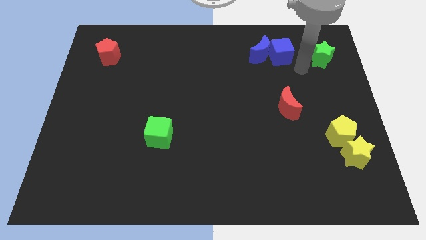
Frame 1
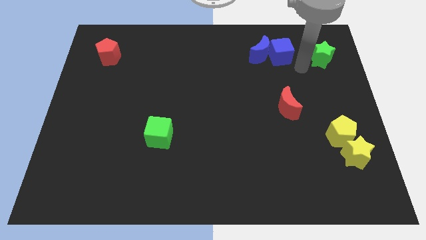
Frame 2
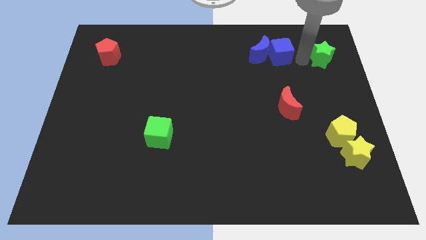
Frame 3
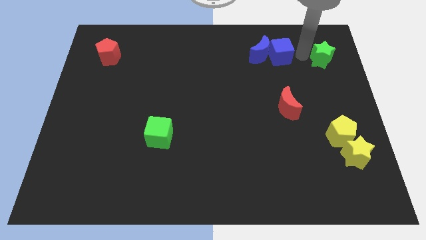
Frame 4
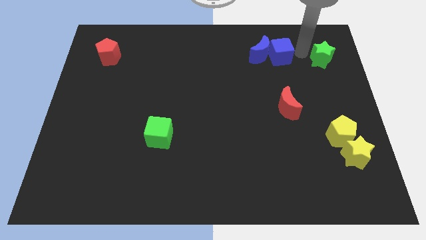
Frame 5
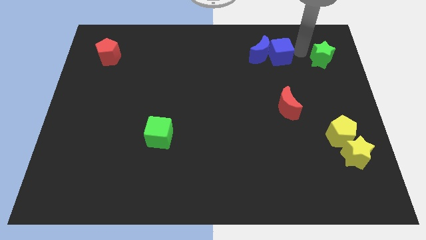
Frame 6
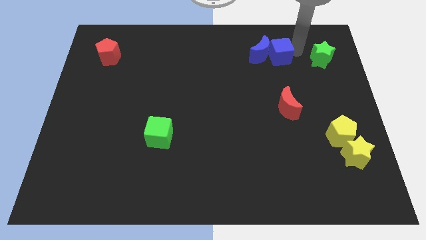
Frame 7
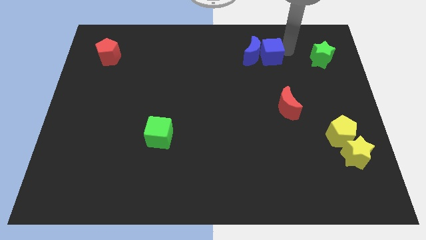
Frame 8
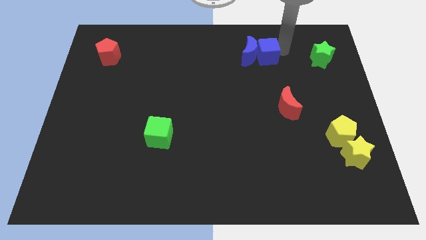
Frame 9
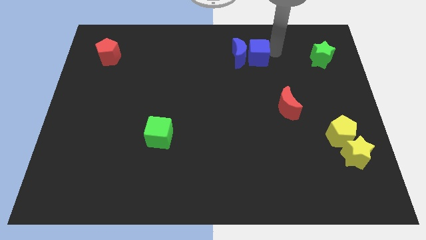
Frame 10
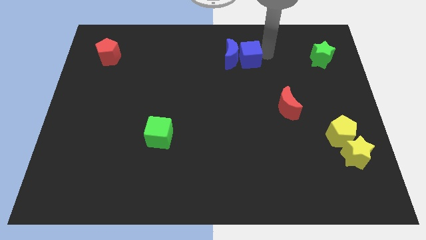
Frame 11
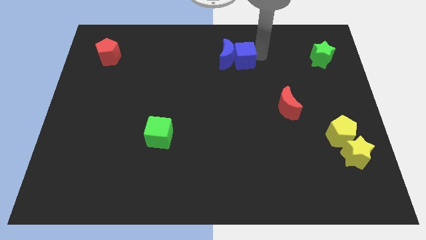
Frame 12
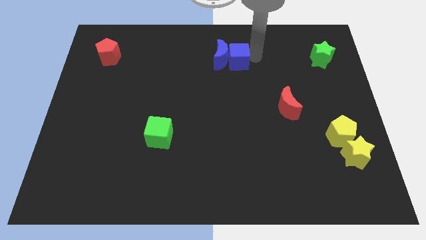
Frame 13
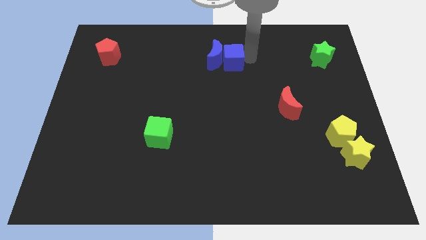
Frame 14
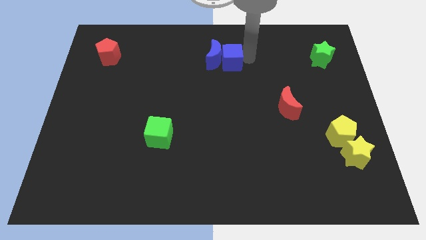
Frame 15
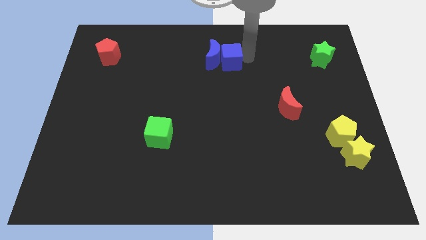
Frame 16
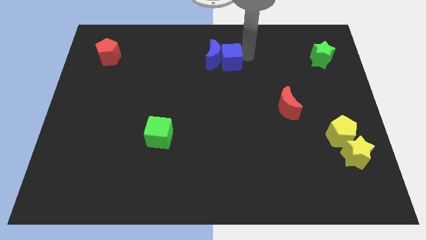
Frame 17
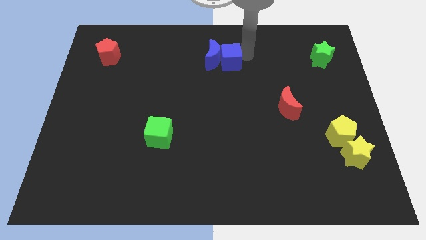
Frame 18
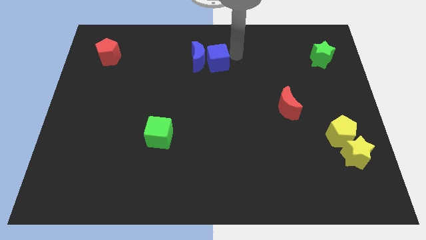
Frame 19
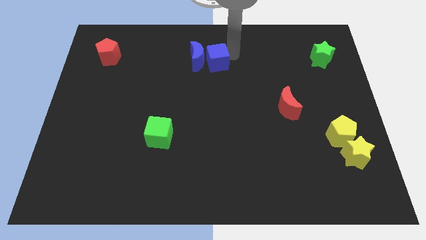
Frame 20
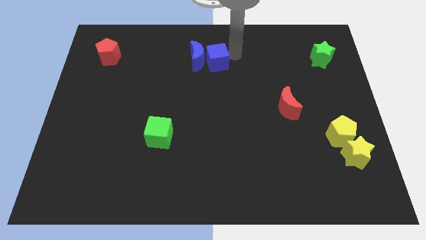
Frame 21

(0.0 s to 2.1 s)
push both the blue blocks towards red pentagon

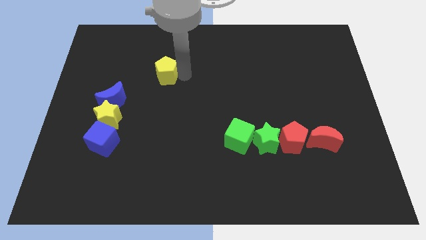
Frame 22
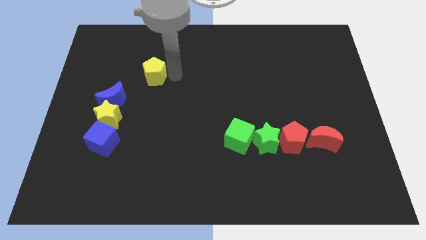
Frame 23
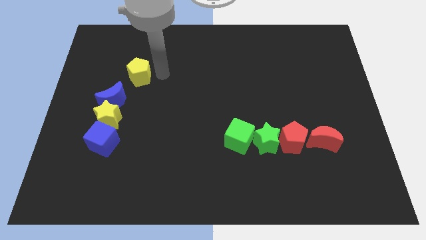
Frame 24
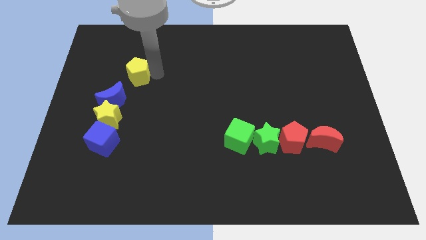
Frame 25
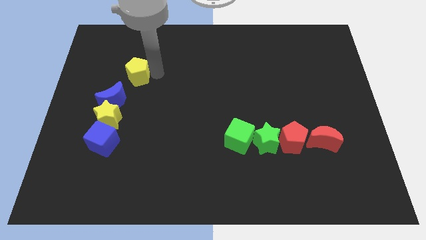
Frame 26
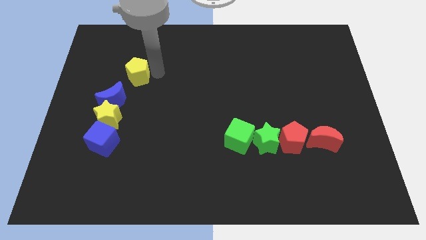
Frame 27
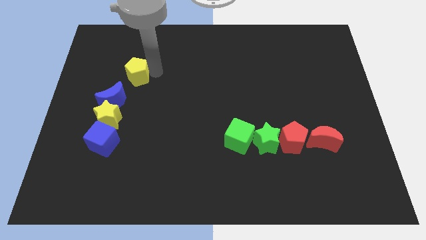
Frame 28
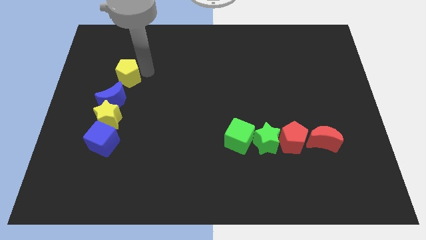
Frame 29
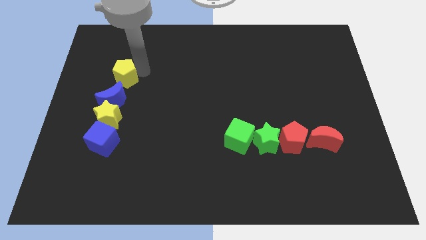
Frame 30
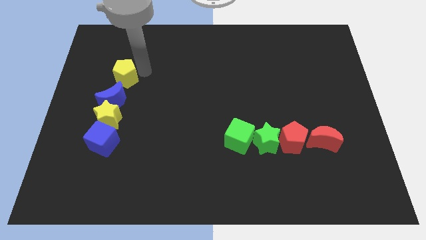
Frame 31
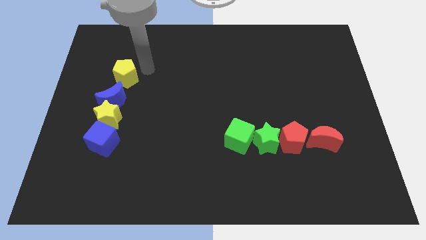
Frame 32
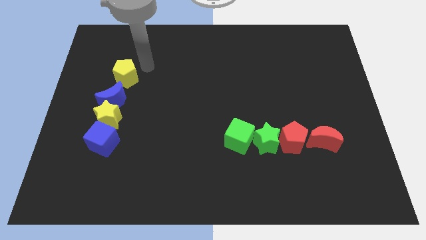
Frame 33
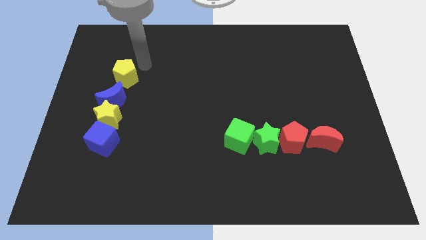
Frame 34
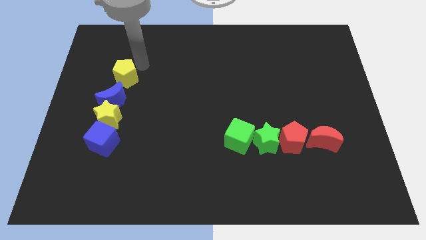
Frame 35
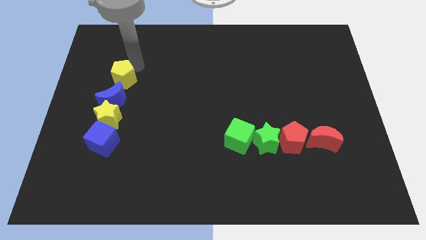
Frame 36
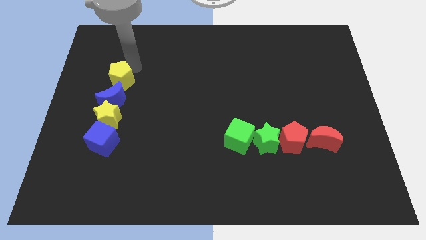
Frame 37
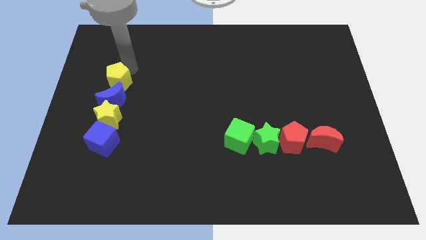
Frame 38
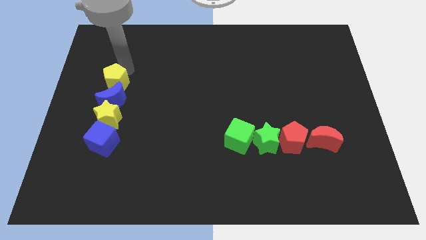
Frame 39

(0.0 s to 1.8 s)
push the yellow pentagon to the top of the blue crescent

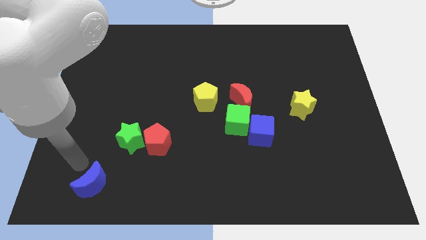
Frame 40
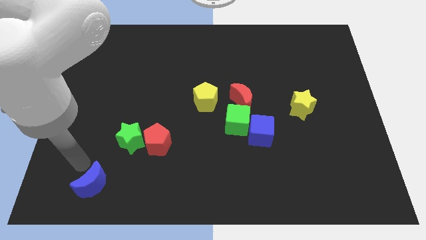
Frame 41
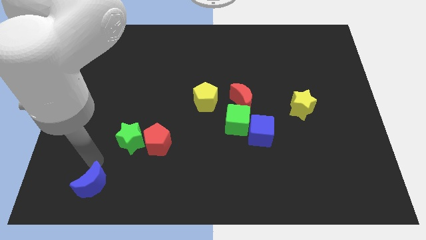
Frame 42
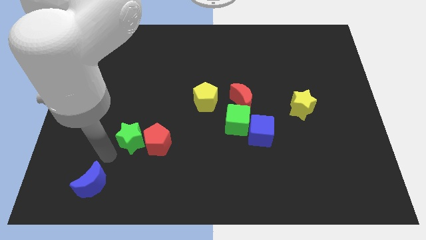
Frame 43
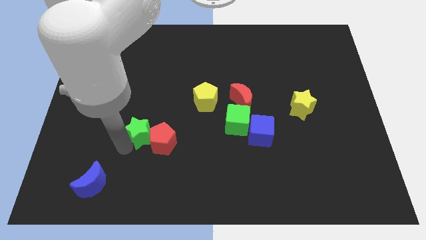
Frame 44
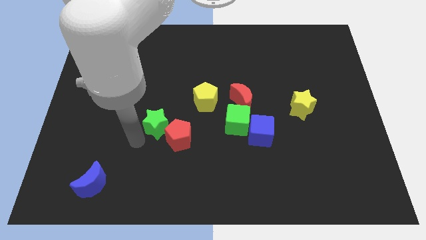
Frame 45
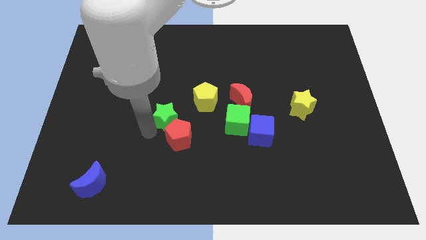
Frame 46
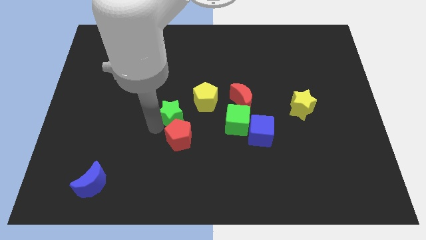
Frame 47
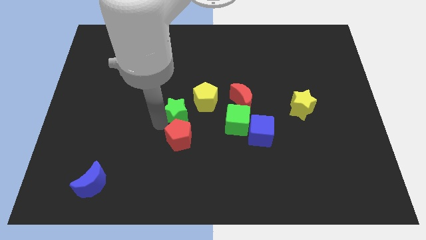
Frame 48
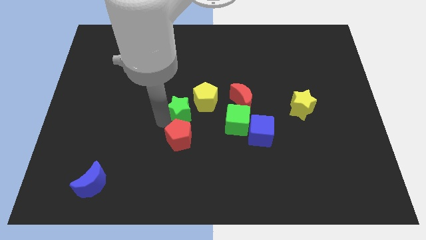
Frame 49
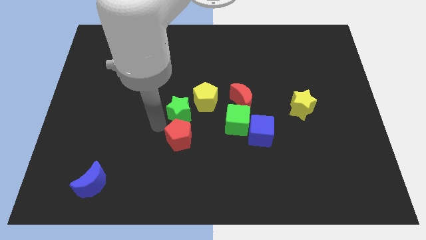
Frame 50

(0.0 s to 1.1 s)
place the green star above the red pentagon

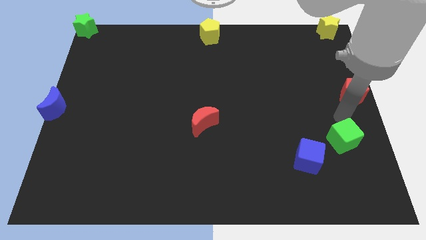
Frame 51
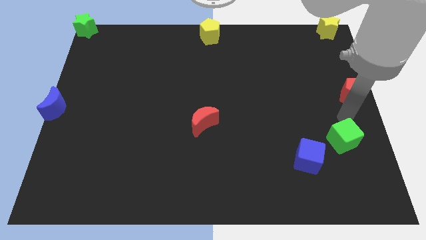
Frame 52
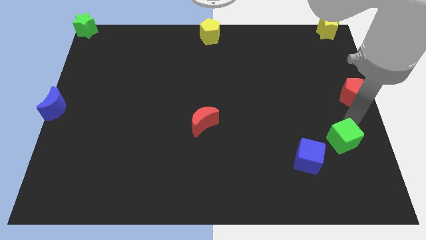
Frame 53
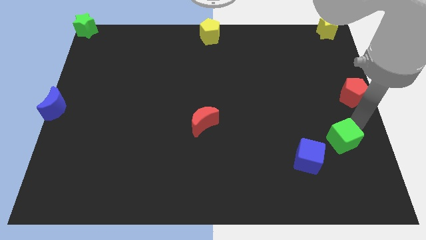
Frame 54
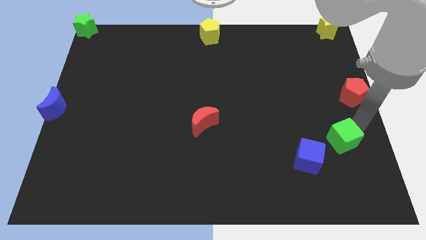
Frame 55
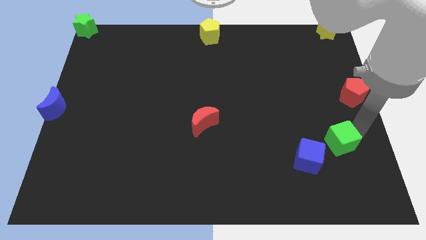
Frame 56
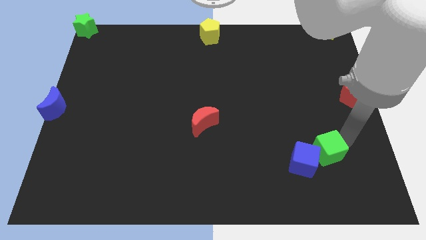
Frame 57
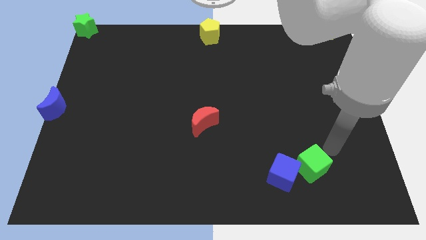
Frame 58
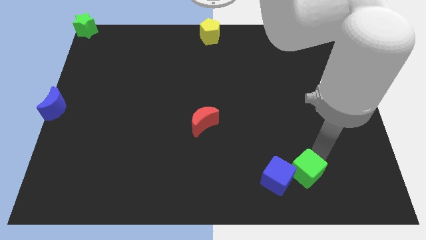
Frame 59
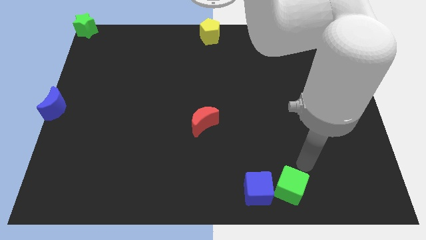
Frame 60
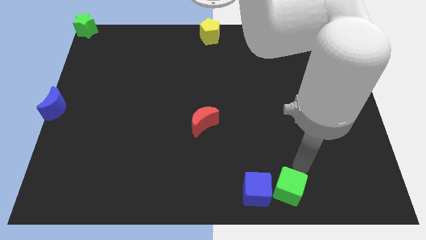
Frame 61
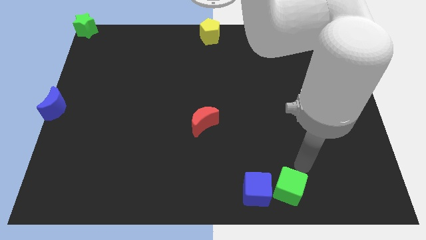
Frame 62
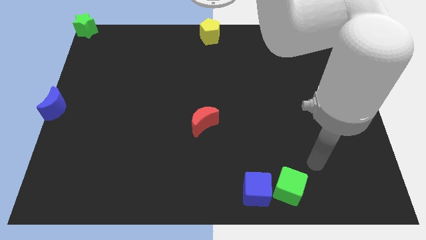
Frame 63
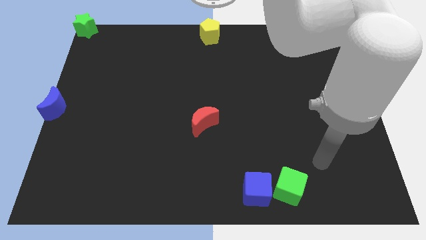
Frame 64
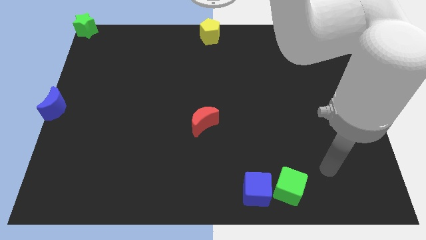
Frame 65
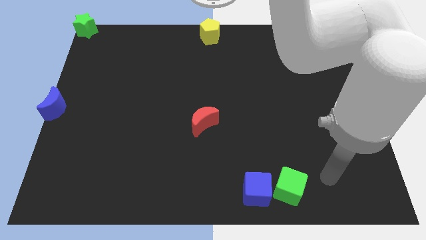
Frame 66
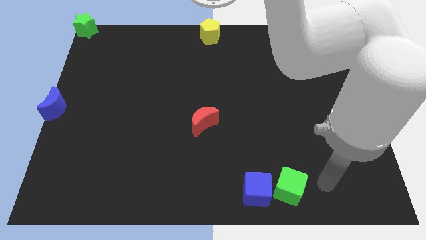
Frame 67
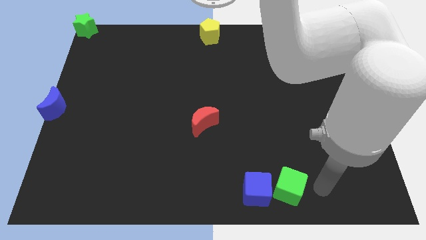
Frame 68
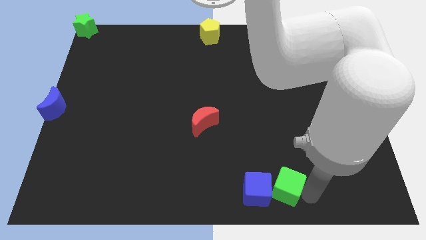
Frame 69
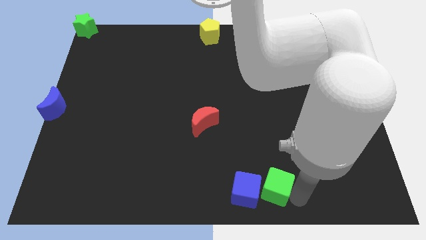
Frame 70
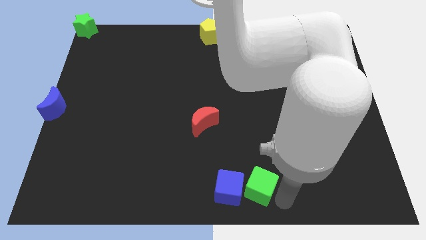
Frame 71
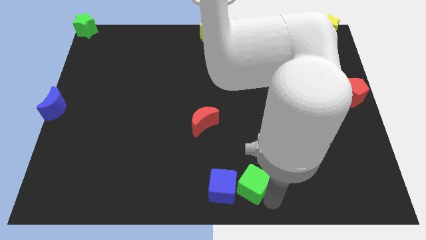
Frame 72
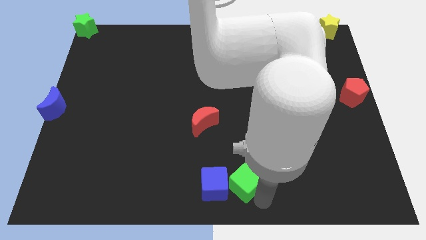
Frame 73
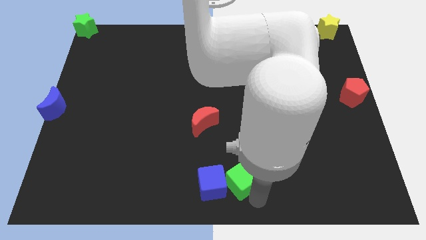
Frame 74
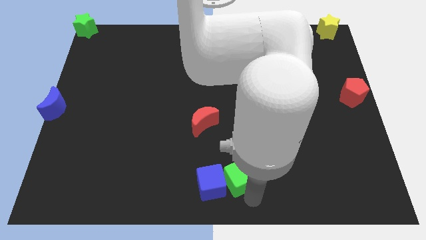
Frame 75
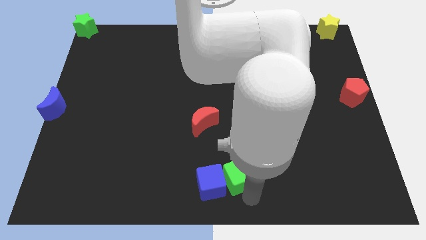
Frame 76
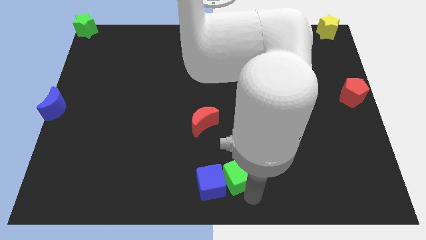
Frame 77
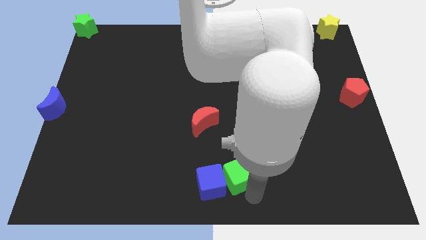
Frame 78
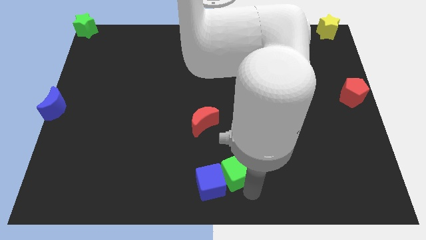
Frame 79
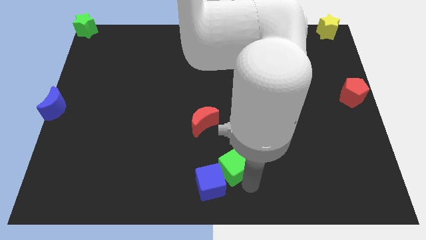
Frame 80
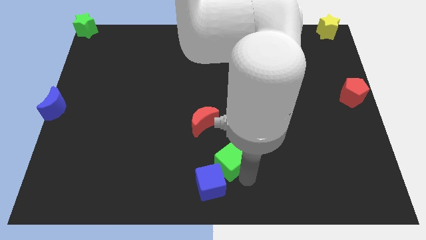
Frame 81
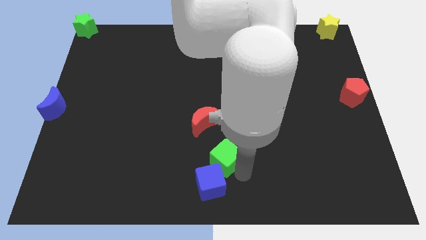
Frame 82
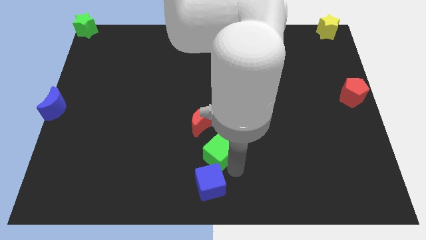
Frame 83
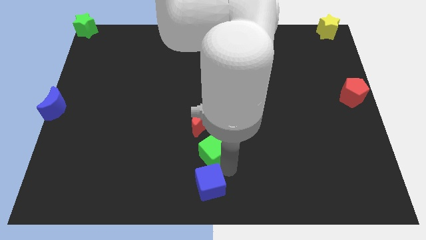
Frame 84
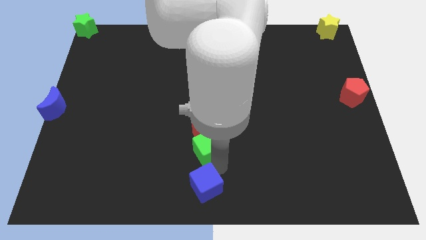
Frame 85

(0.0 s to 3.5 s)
move the green cube and blue cube to the bottom middle of the board

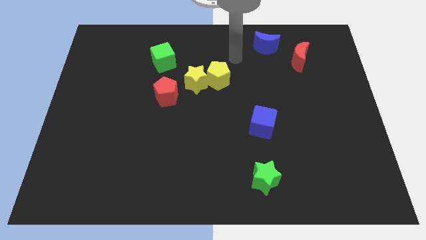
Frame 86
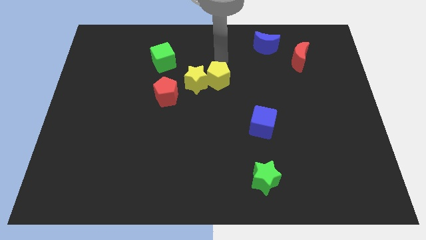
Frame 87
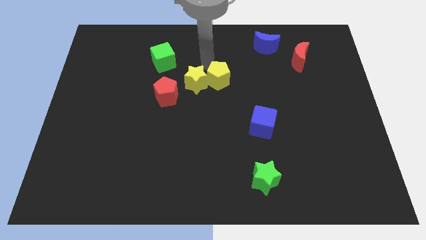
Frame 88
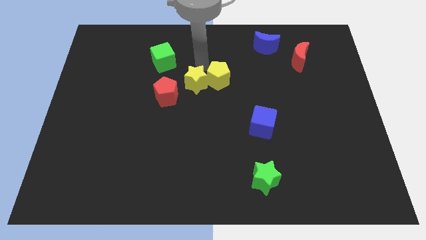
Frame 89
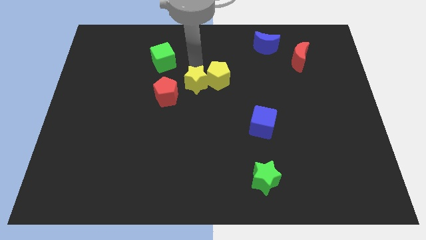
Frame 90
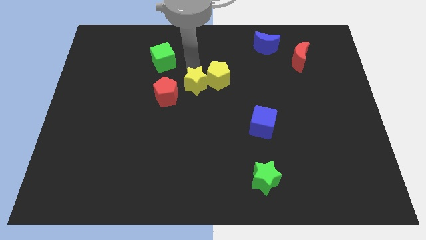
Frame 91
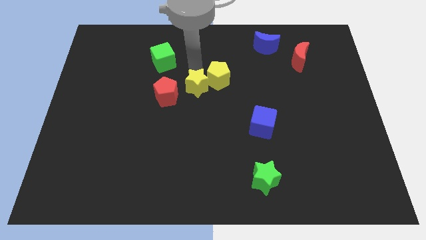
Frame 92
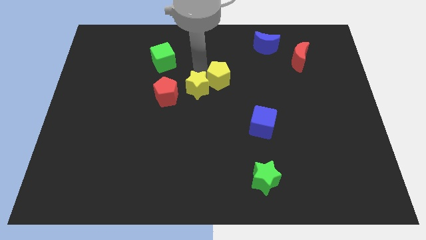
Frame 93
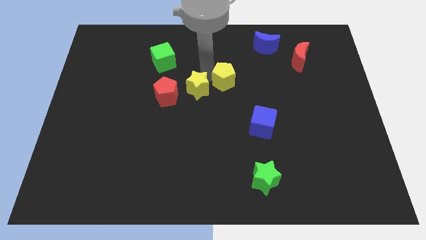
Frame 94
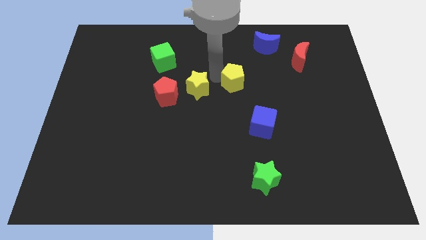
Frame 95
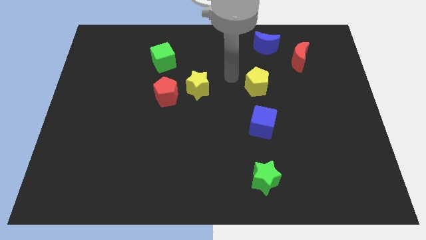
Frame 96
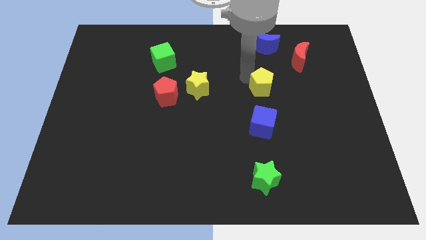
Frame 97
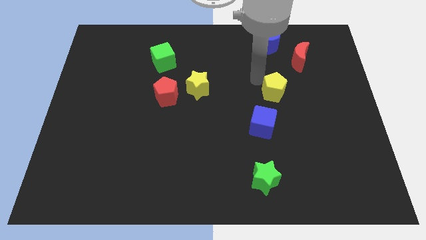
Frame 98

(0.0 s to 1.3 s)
separate yellow penatgon towards blue cube
